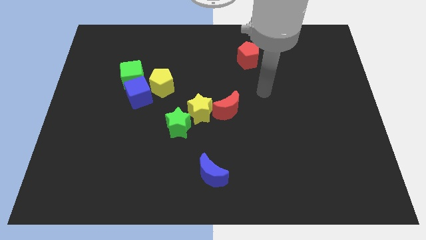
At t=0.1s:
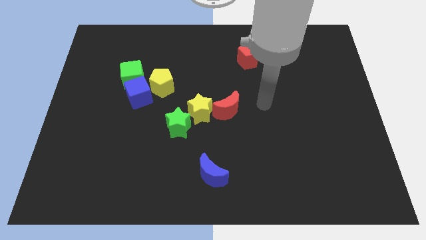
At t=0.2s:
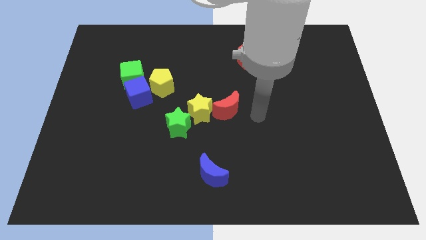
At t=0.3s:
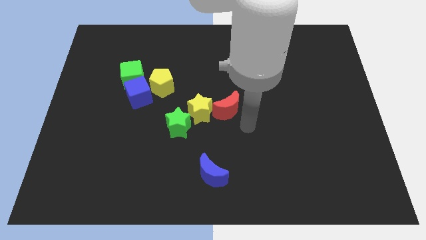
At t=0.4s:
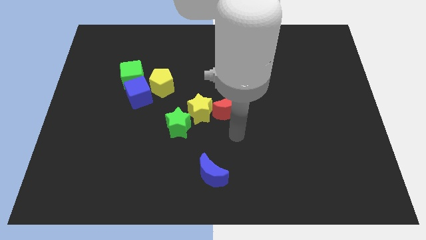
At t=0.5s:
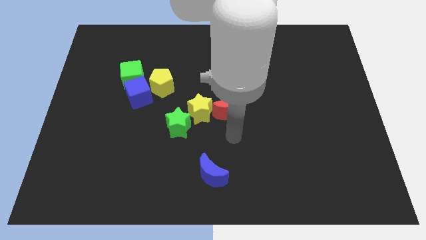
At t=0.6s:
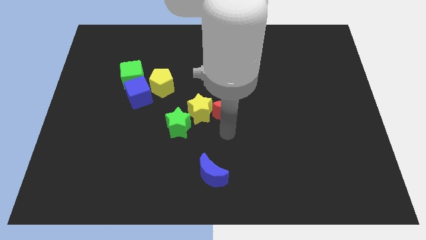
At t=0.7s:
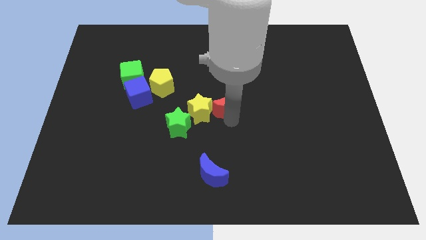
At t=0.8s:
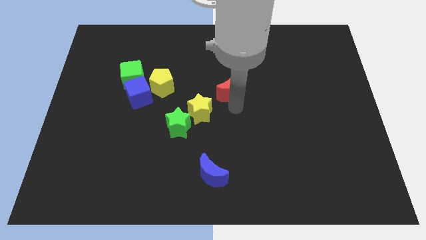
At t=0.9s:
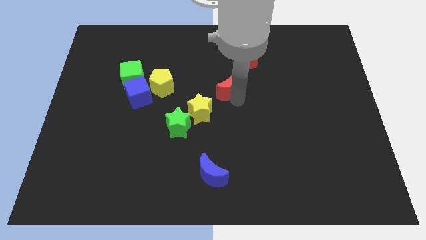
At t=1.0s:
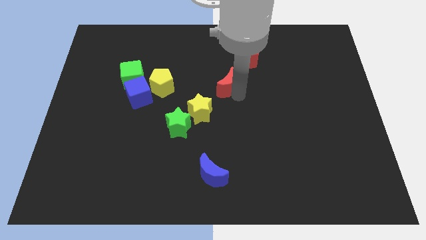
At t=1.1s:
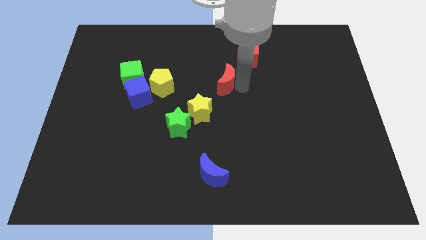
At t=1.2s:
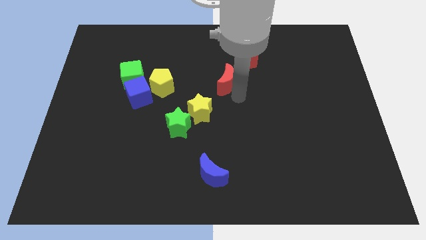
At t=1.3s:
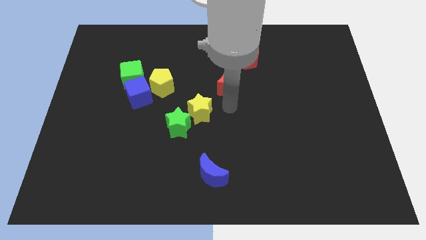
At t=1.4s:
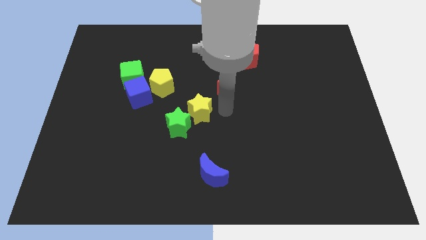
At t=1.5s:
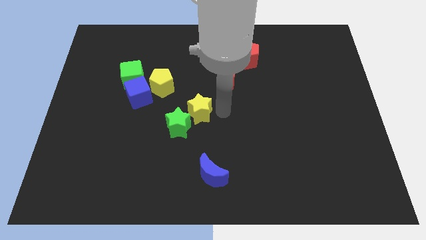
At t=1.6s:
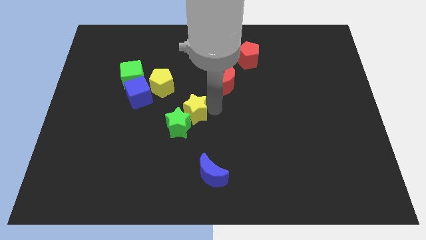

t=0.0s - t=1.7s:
place the red crescent in between the red pentagon and the yellow star

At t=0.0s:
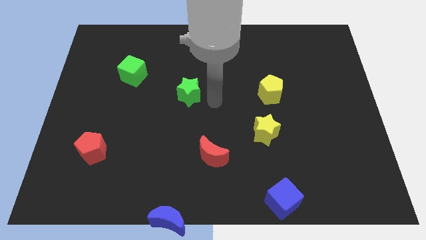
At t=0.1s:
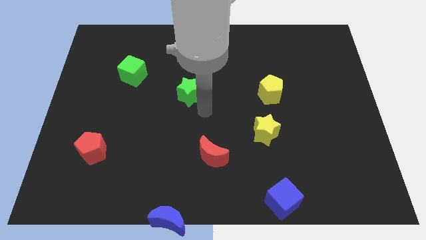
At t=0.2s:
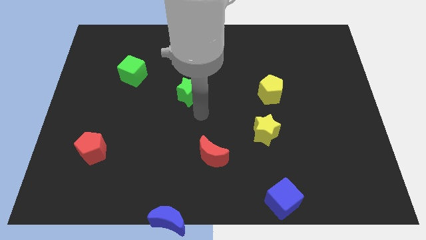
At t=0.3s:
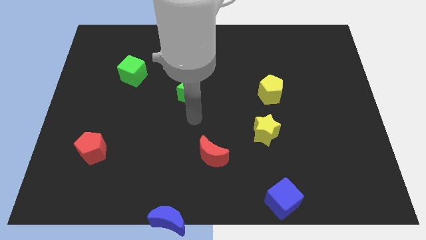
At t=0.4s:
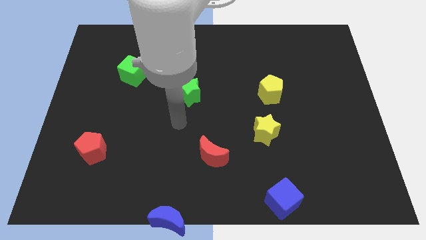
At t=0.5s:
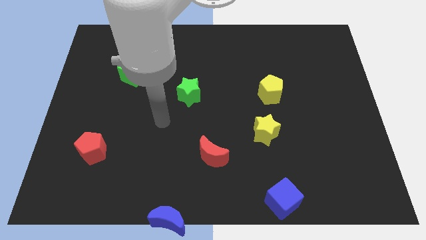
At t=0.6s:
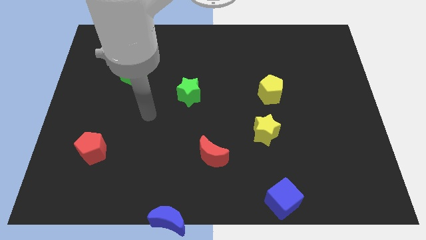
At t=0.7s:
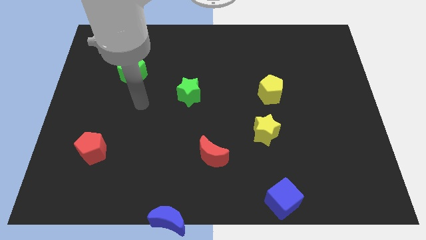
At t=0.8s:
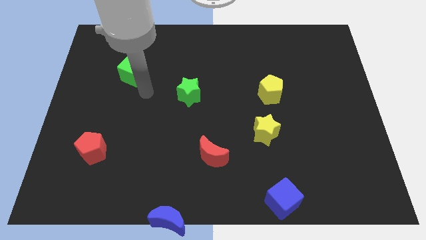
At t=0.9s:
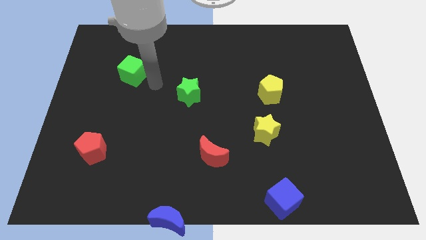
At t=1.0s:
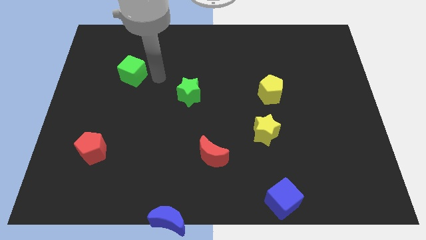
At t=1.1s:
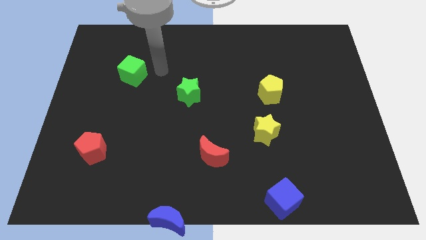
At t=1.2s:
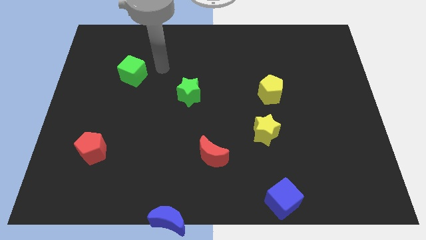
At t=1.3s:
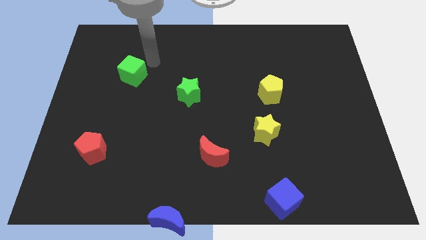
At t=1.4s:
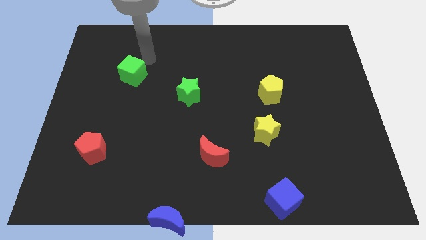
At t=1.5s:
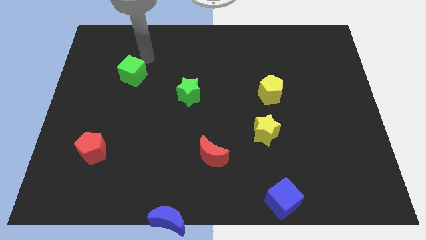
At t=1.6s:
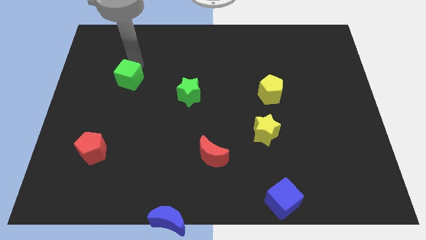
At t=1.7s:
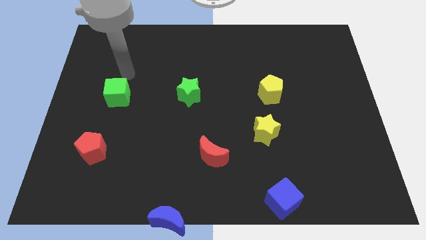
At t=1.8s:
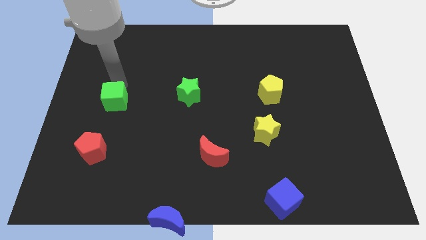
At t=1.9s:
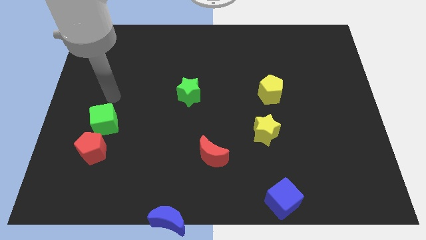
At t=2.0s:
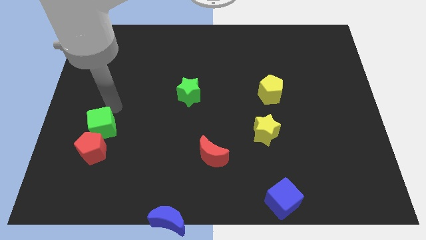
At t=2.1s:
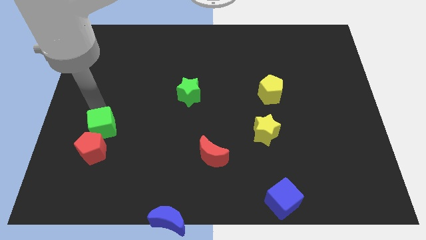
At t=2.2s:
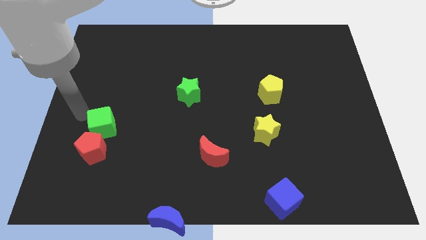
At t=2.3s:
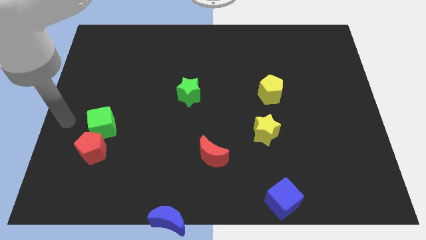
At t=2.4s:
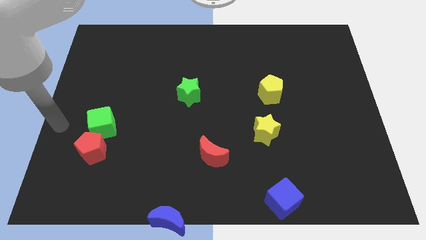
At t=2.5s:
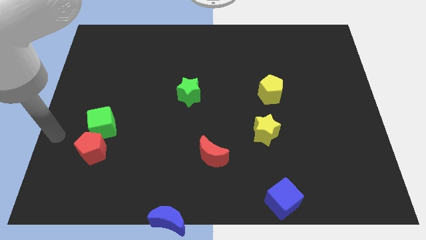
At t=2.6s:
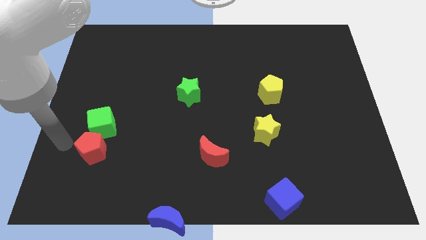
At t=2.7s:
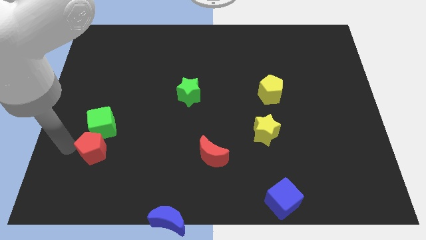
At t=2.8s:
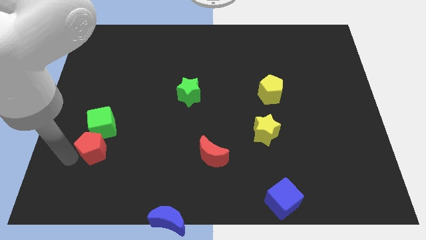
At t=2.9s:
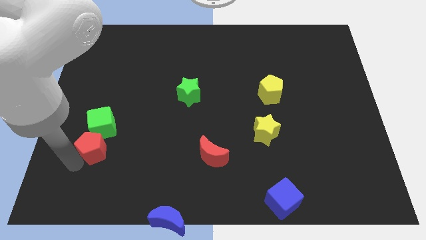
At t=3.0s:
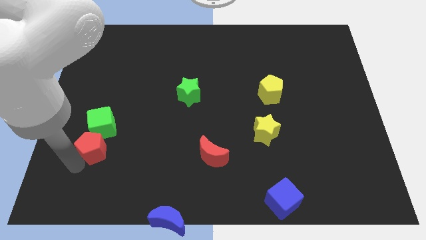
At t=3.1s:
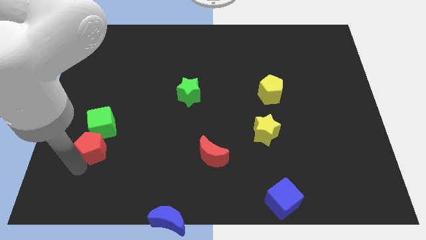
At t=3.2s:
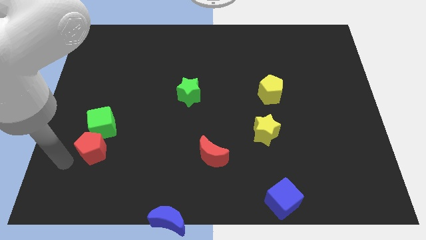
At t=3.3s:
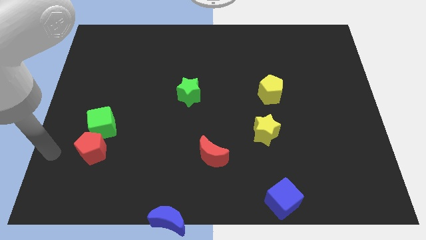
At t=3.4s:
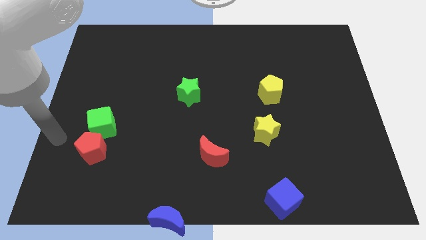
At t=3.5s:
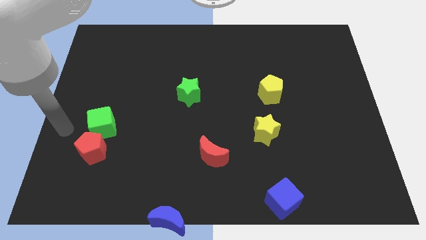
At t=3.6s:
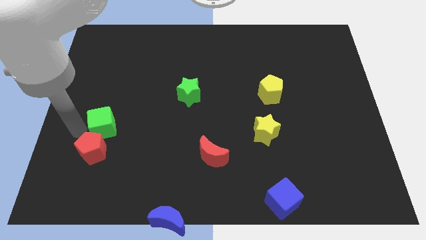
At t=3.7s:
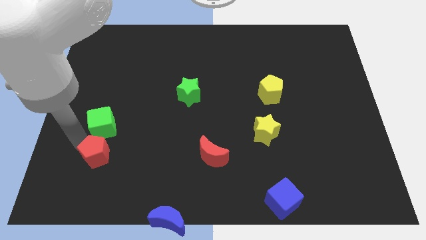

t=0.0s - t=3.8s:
push the green cube to the top of the red pentagon

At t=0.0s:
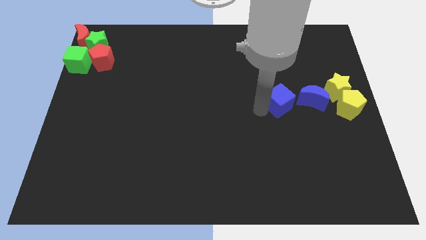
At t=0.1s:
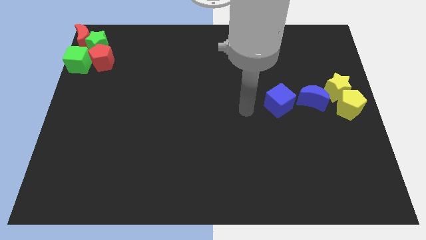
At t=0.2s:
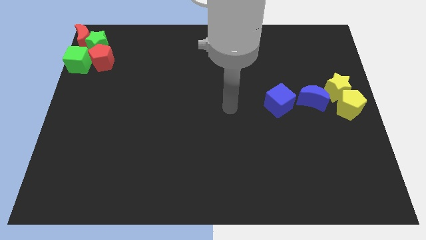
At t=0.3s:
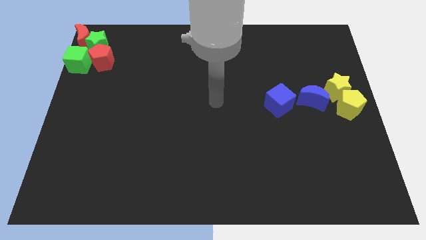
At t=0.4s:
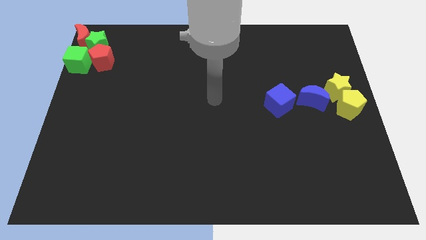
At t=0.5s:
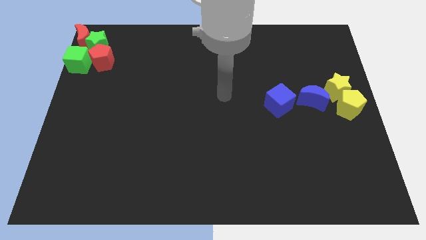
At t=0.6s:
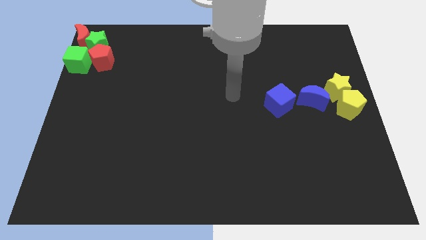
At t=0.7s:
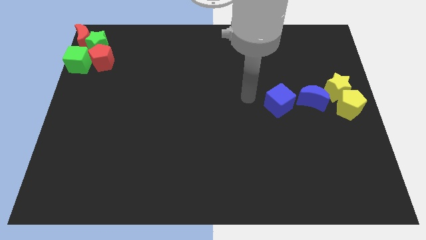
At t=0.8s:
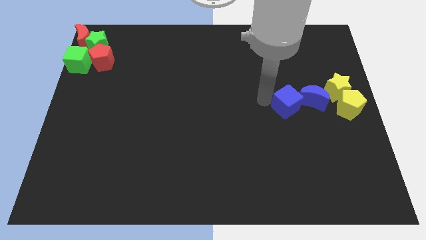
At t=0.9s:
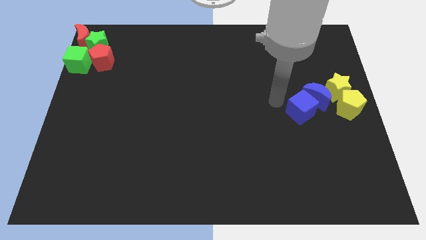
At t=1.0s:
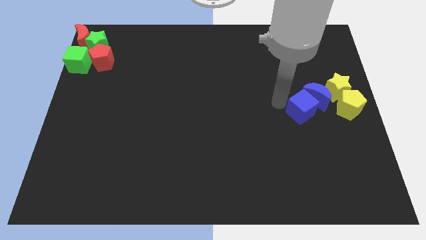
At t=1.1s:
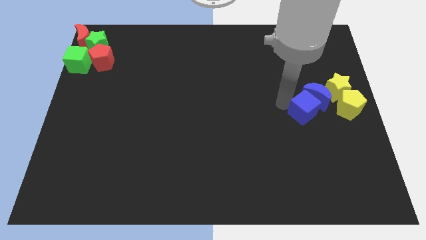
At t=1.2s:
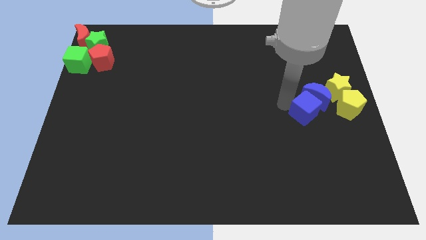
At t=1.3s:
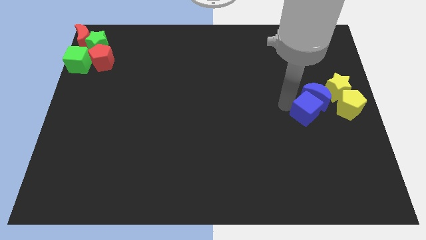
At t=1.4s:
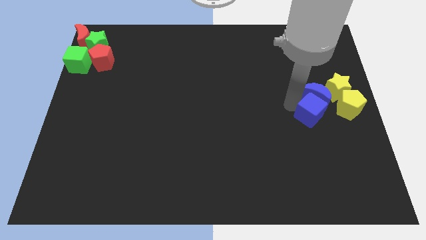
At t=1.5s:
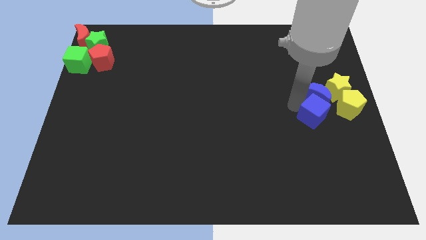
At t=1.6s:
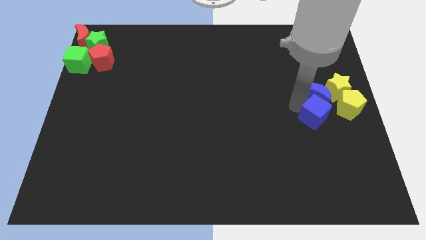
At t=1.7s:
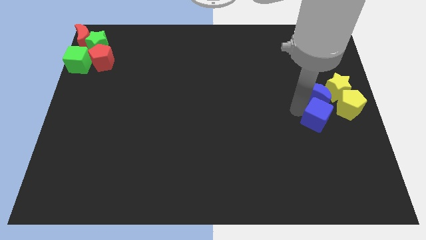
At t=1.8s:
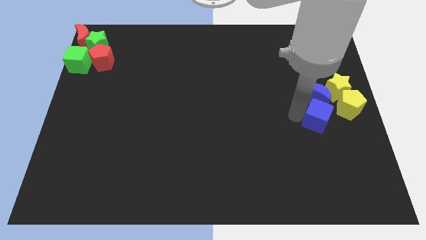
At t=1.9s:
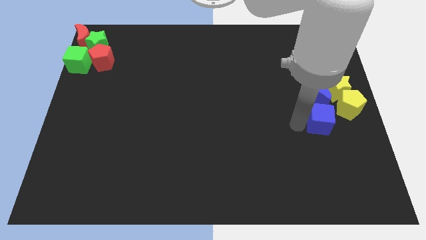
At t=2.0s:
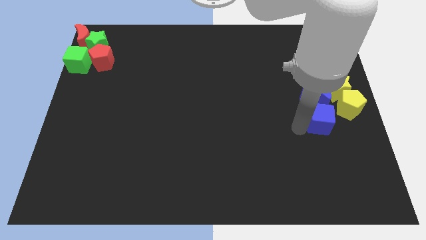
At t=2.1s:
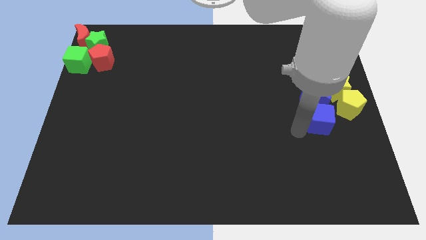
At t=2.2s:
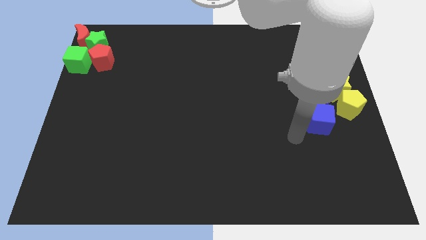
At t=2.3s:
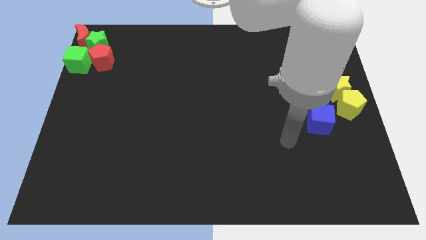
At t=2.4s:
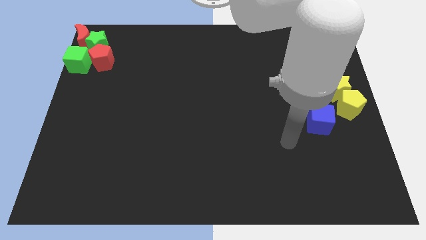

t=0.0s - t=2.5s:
place the blue cube down to the blue crescent

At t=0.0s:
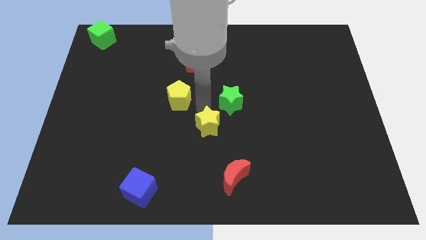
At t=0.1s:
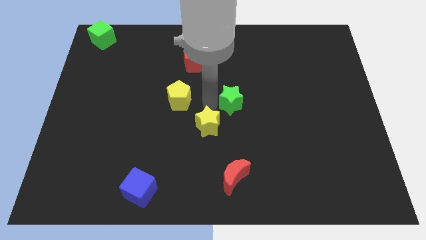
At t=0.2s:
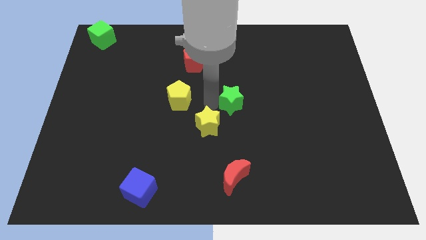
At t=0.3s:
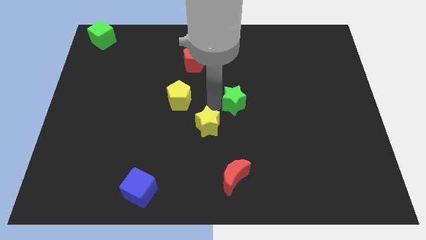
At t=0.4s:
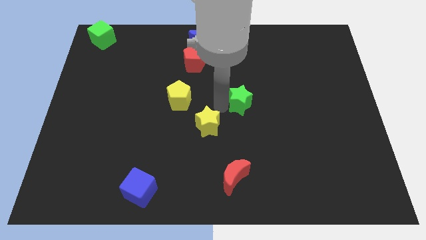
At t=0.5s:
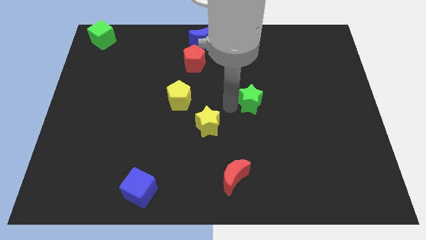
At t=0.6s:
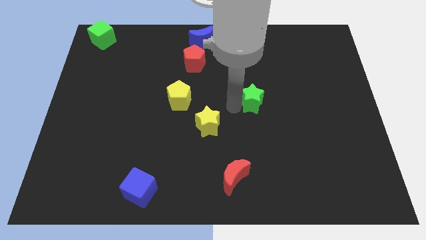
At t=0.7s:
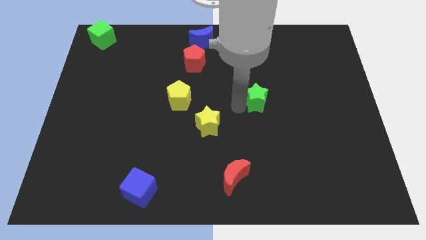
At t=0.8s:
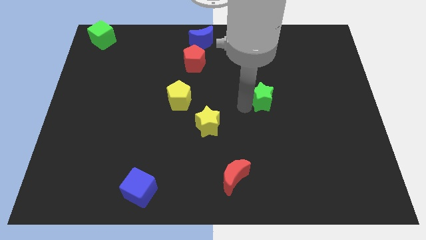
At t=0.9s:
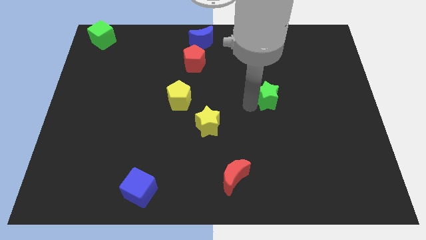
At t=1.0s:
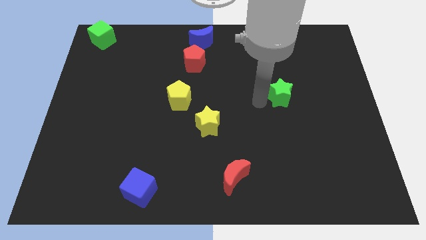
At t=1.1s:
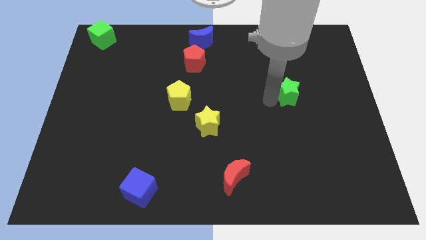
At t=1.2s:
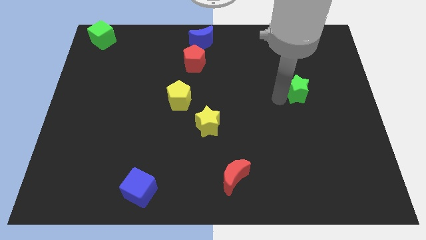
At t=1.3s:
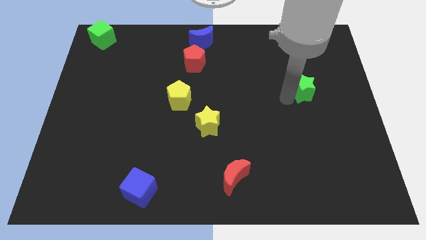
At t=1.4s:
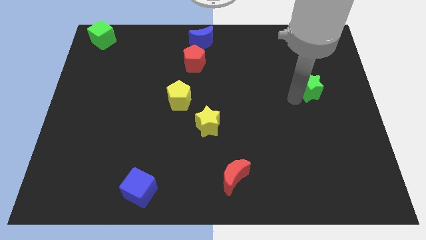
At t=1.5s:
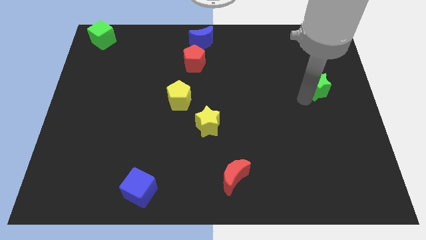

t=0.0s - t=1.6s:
move the green cube towards the right side of the board
